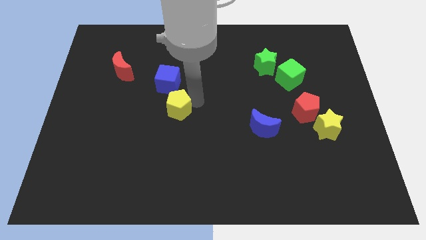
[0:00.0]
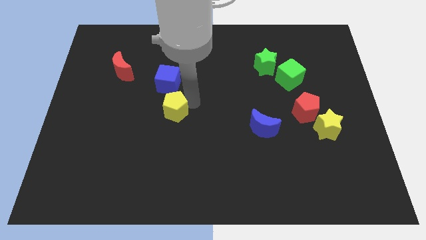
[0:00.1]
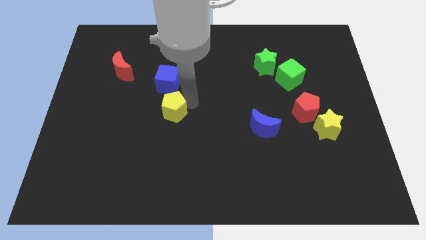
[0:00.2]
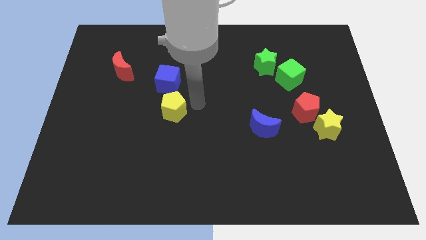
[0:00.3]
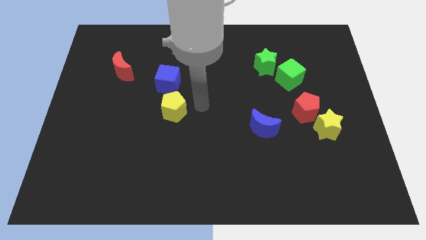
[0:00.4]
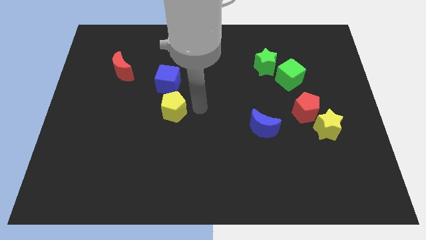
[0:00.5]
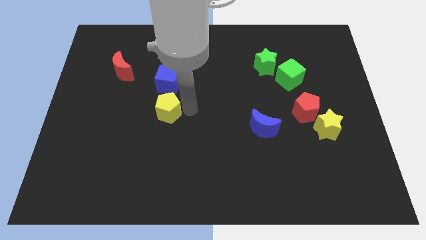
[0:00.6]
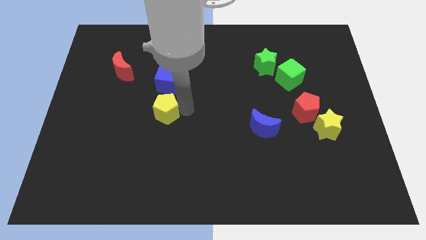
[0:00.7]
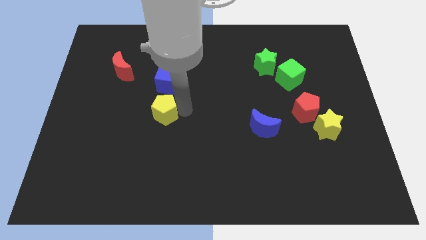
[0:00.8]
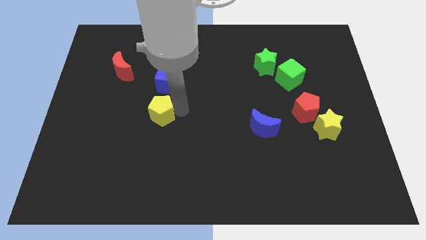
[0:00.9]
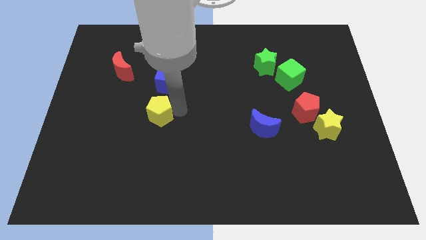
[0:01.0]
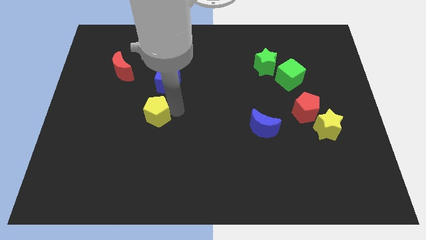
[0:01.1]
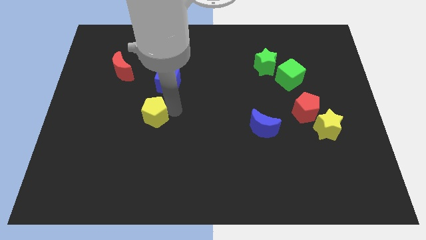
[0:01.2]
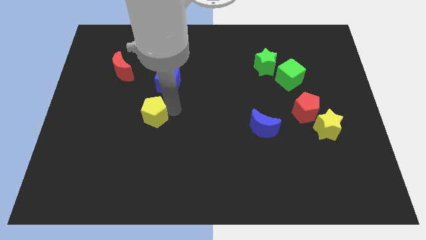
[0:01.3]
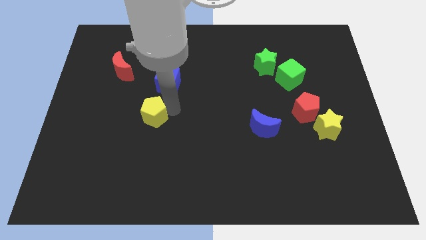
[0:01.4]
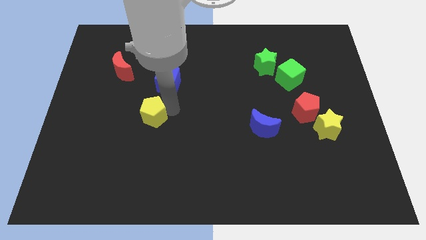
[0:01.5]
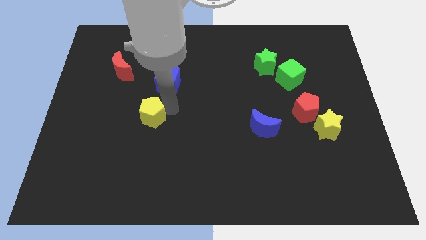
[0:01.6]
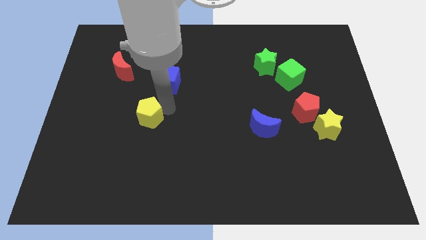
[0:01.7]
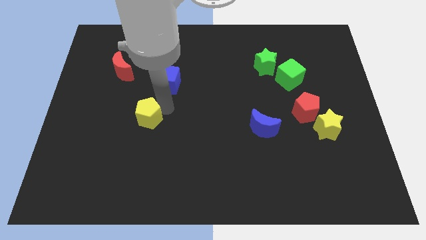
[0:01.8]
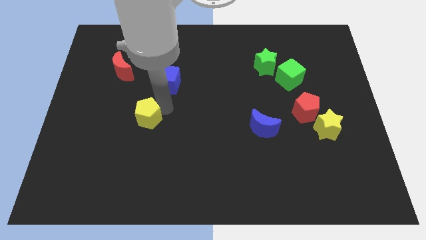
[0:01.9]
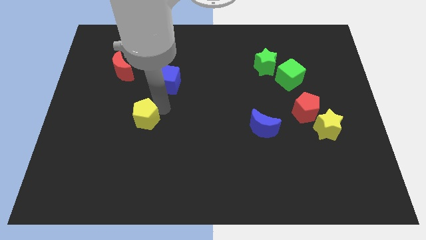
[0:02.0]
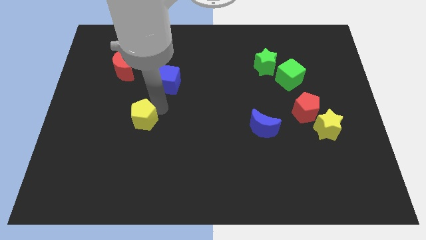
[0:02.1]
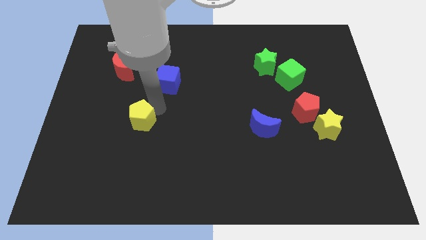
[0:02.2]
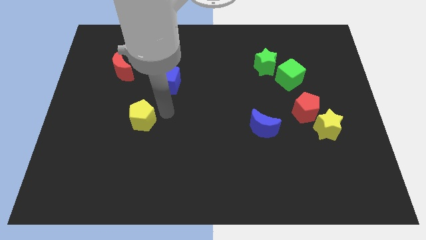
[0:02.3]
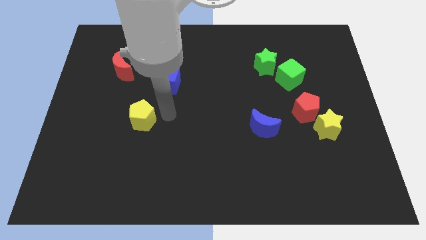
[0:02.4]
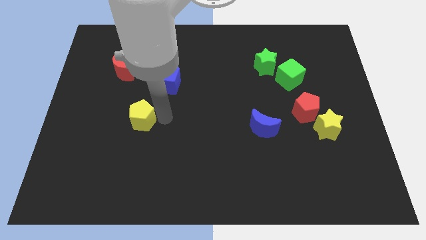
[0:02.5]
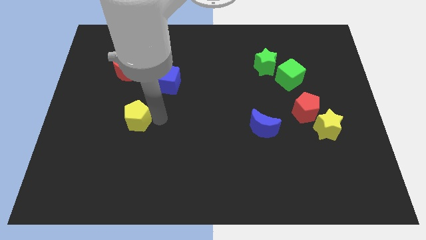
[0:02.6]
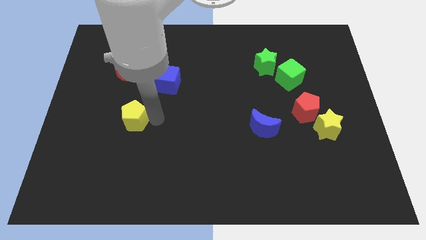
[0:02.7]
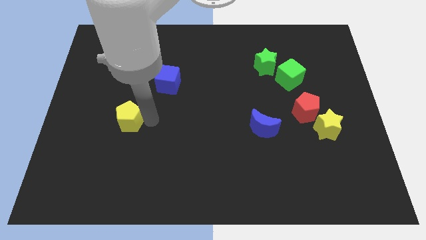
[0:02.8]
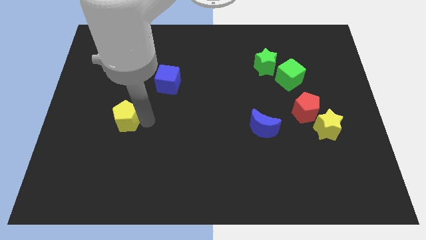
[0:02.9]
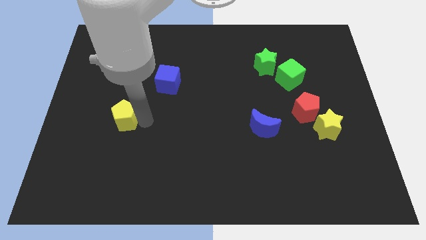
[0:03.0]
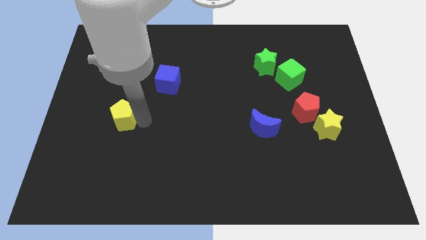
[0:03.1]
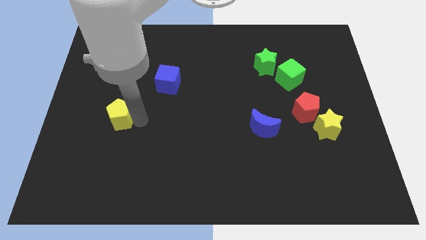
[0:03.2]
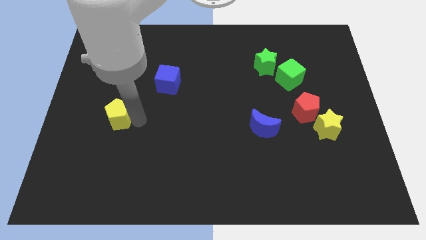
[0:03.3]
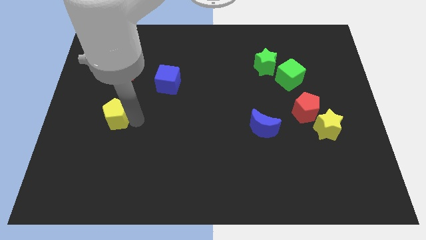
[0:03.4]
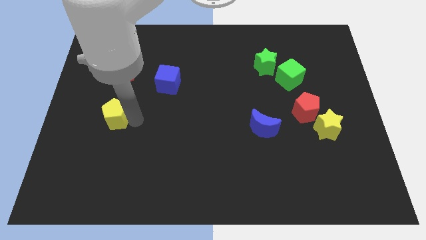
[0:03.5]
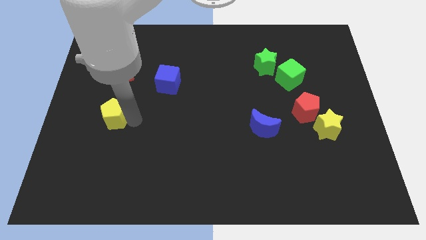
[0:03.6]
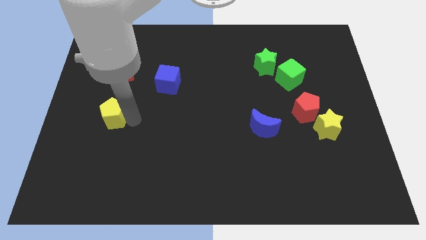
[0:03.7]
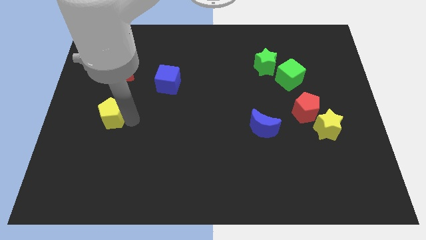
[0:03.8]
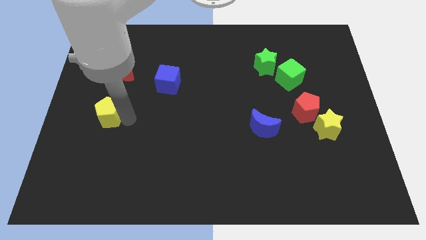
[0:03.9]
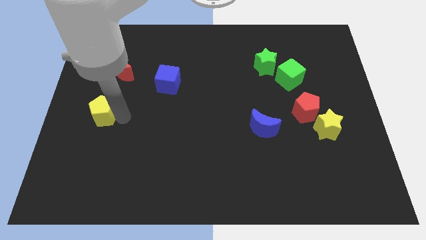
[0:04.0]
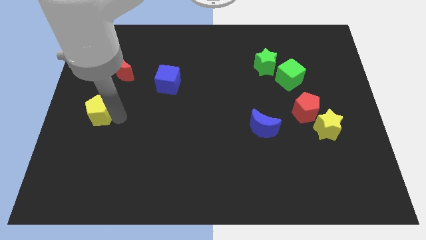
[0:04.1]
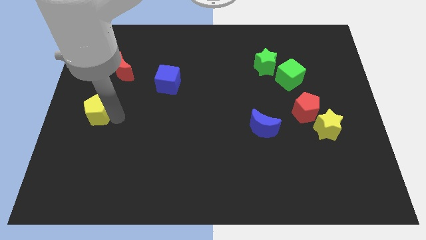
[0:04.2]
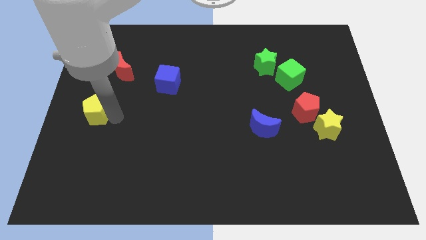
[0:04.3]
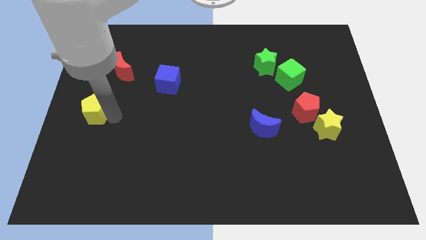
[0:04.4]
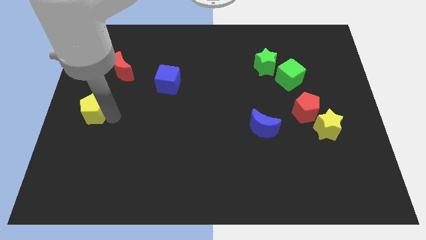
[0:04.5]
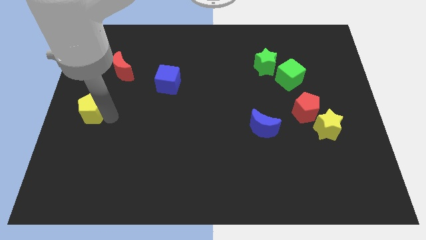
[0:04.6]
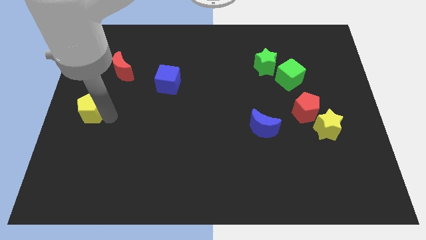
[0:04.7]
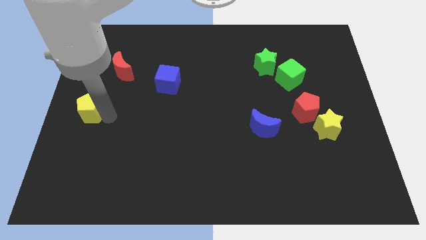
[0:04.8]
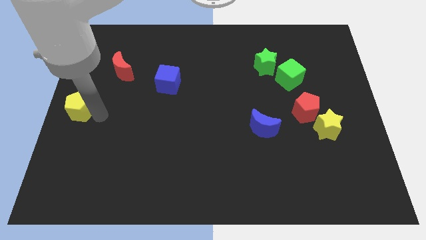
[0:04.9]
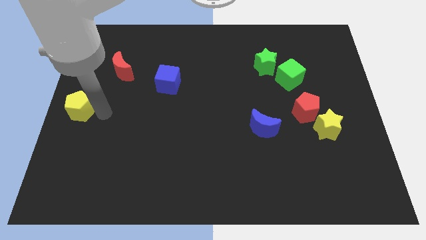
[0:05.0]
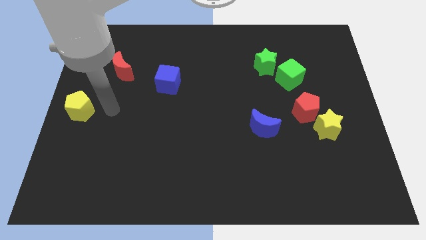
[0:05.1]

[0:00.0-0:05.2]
push the yellow pentagon to the left center

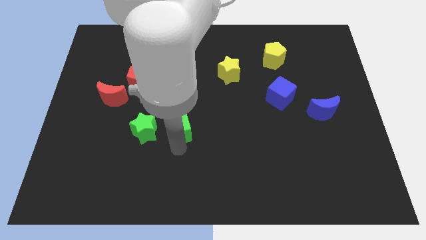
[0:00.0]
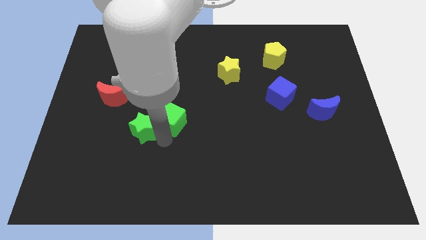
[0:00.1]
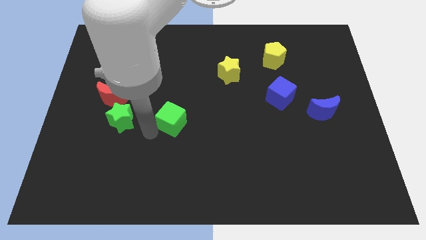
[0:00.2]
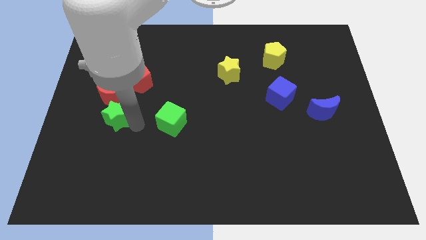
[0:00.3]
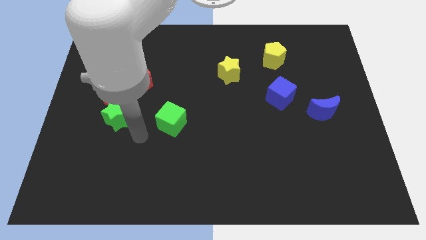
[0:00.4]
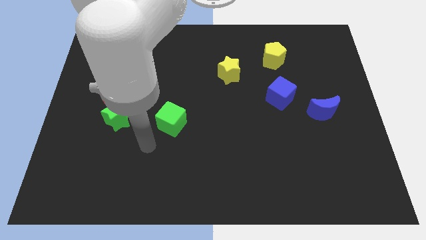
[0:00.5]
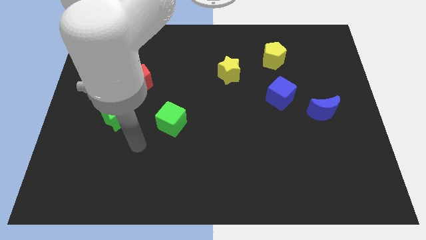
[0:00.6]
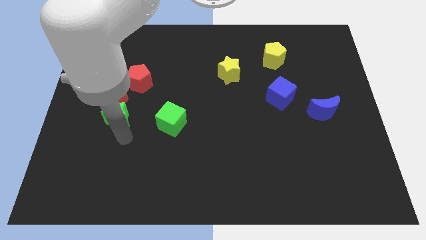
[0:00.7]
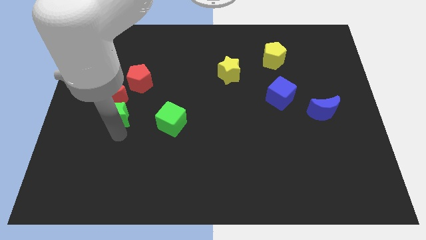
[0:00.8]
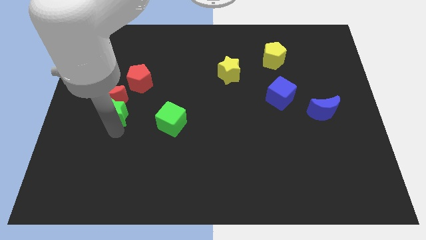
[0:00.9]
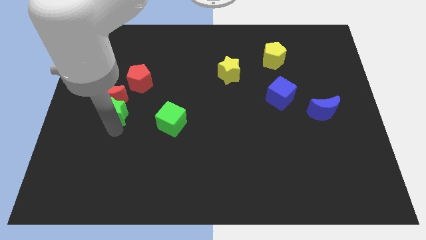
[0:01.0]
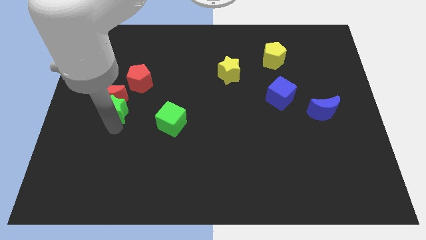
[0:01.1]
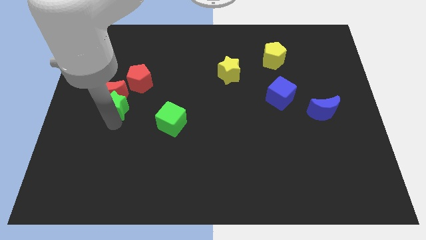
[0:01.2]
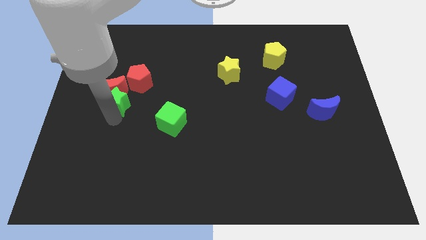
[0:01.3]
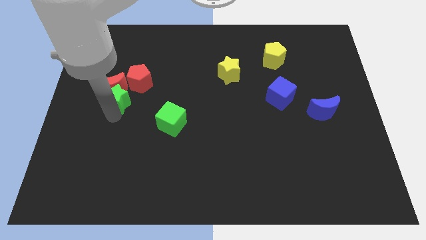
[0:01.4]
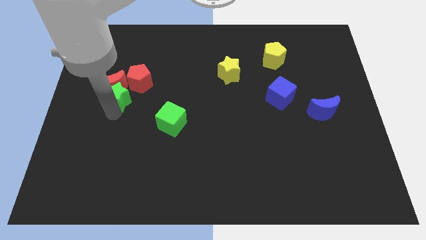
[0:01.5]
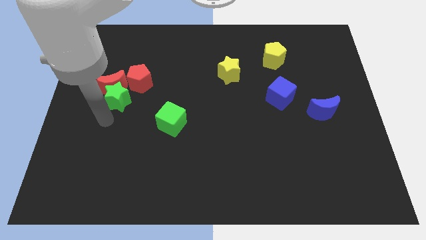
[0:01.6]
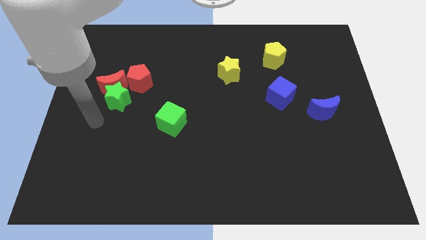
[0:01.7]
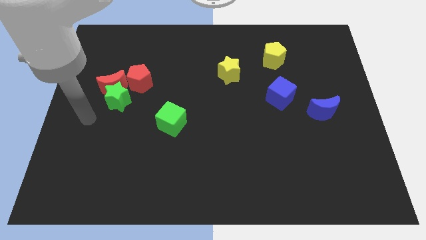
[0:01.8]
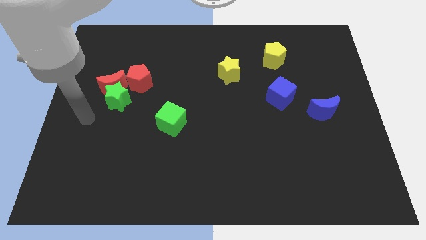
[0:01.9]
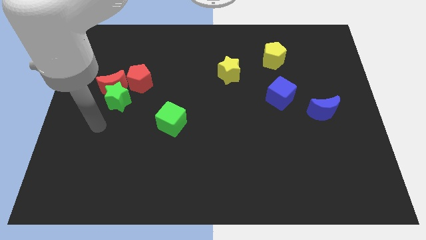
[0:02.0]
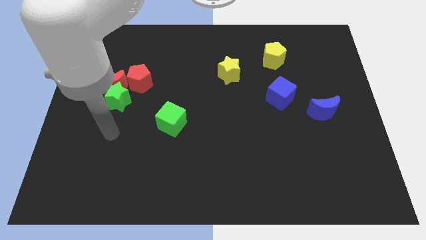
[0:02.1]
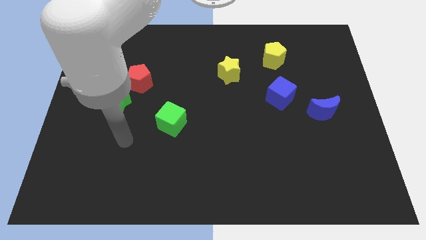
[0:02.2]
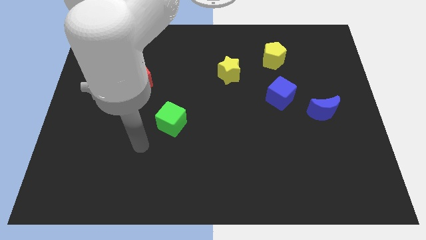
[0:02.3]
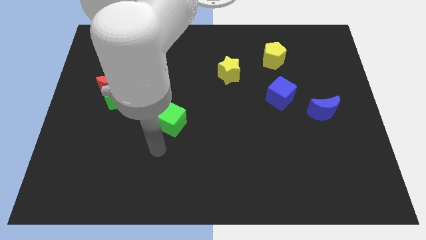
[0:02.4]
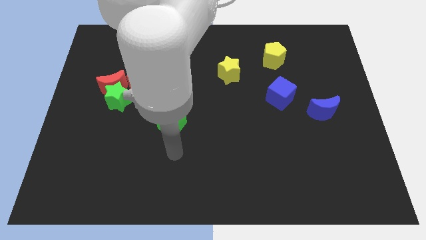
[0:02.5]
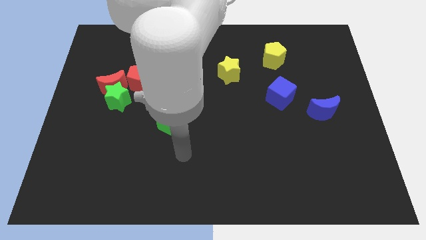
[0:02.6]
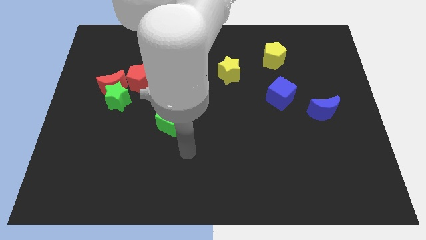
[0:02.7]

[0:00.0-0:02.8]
push green star below red moon

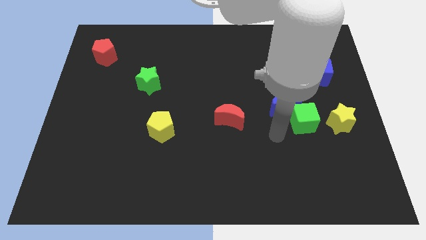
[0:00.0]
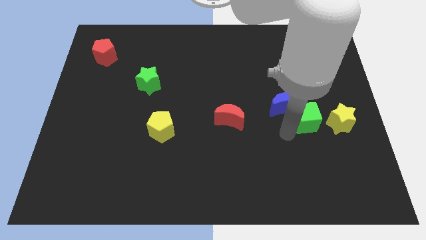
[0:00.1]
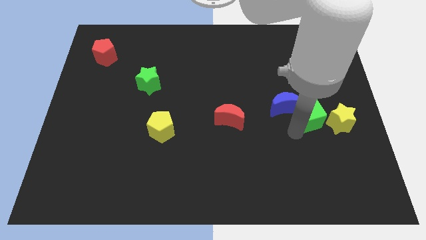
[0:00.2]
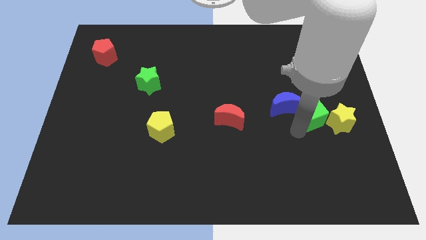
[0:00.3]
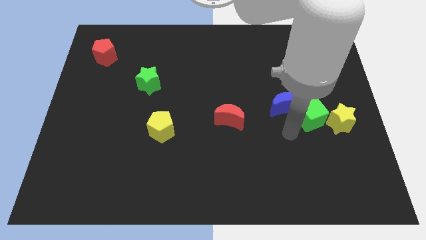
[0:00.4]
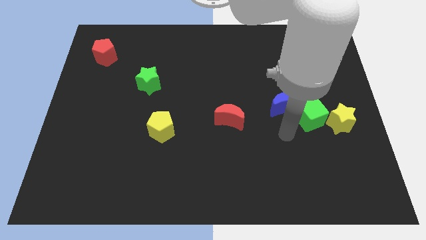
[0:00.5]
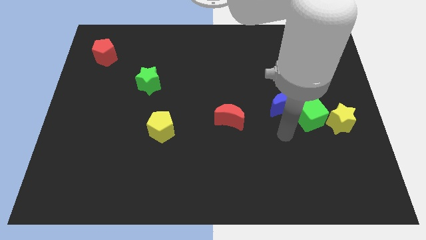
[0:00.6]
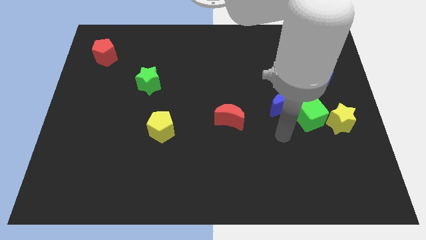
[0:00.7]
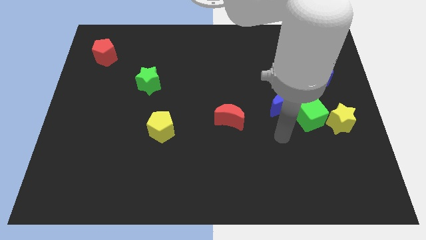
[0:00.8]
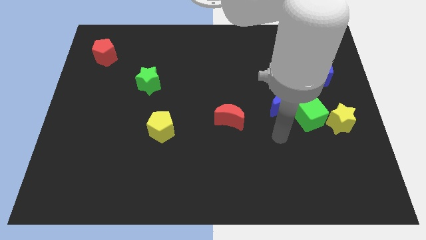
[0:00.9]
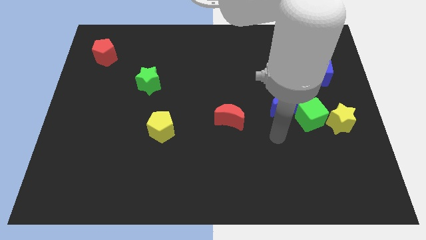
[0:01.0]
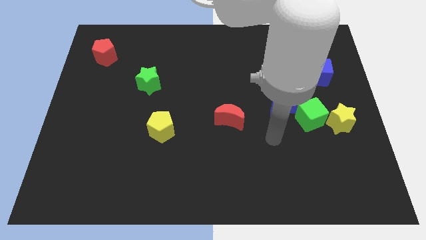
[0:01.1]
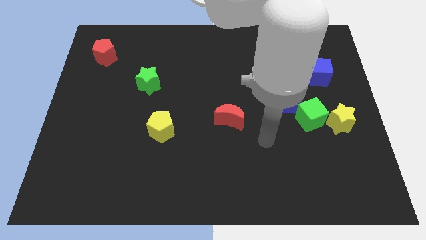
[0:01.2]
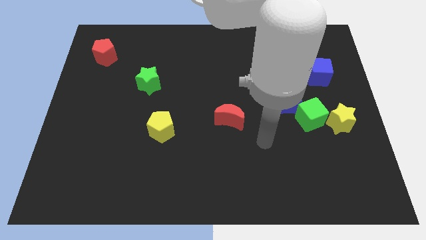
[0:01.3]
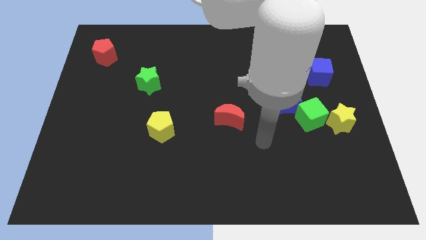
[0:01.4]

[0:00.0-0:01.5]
move the green cube close to the yellow star
